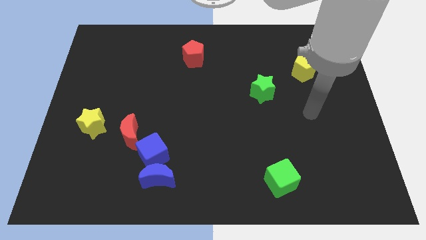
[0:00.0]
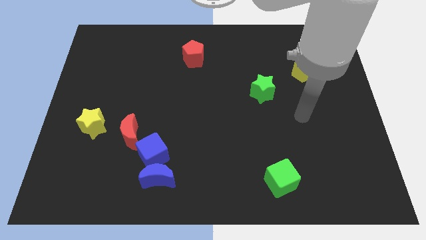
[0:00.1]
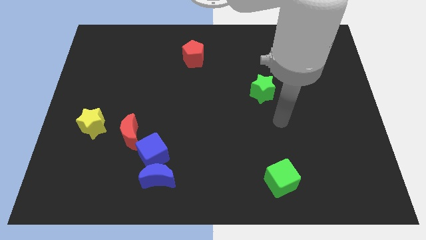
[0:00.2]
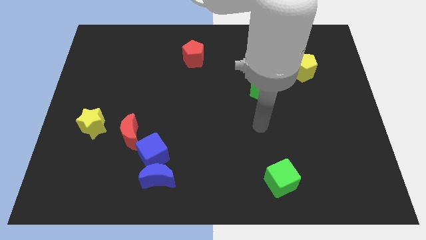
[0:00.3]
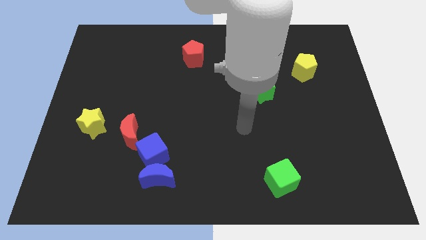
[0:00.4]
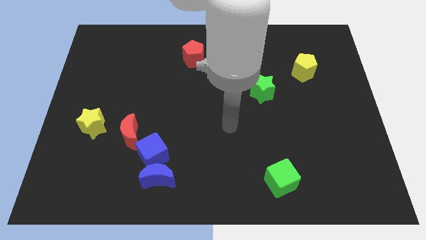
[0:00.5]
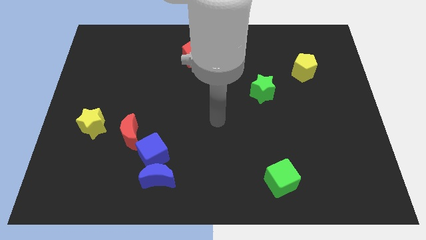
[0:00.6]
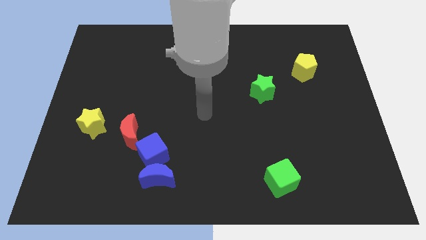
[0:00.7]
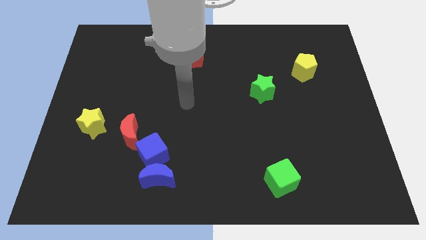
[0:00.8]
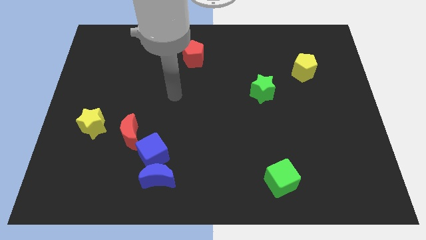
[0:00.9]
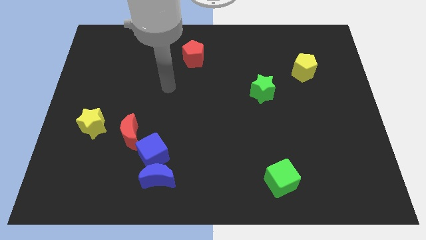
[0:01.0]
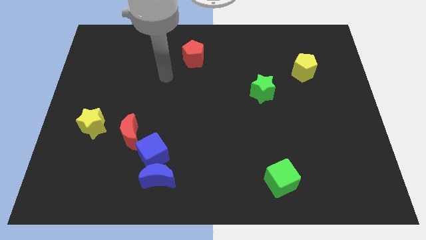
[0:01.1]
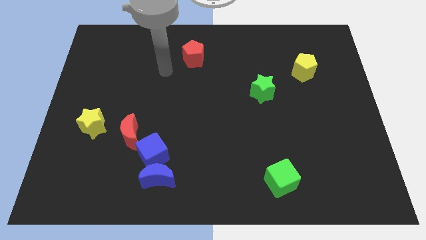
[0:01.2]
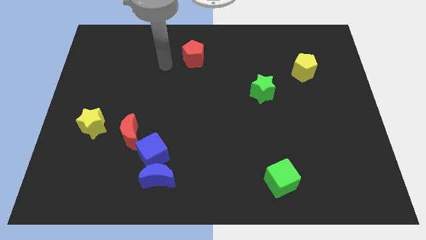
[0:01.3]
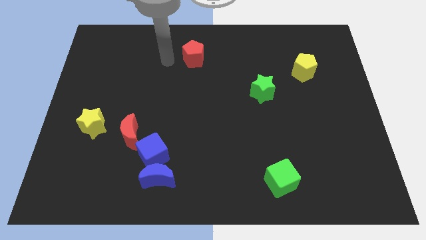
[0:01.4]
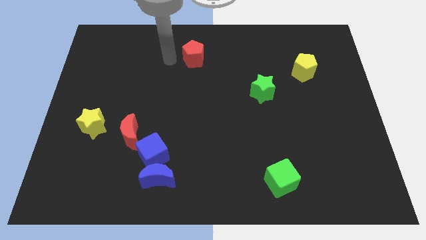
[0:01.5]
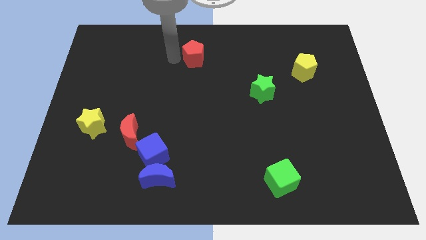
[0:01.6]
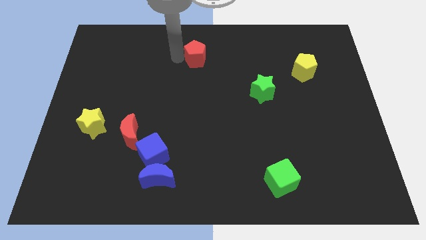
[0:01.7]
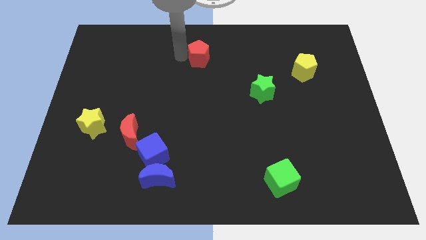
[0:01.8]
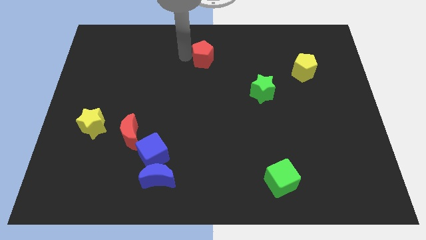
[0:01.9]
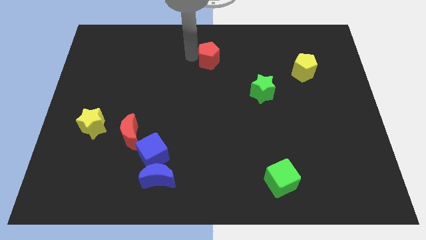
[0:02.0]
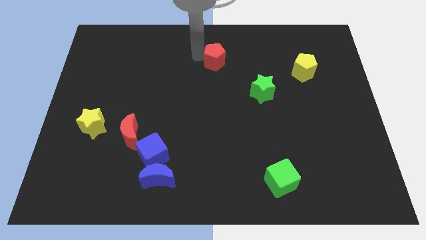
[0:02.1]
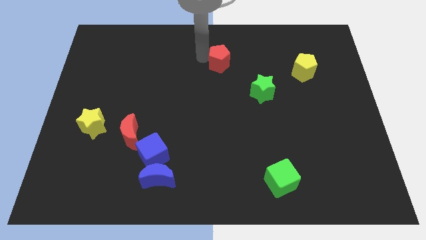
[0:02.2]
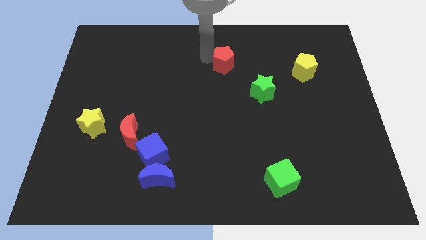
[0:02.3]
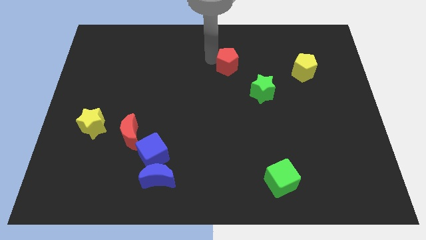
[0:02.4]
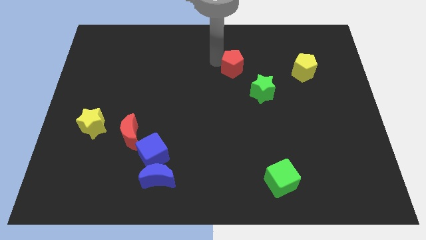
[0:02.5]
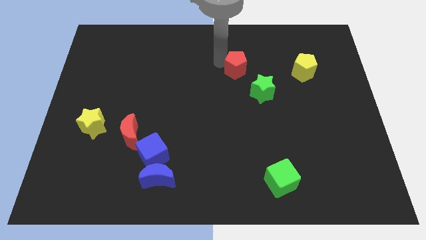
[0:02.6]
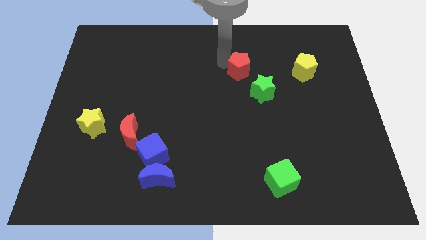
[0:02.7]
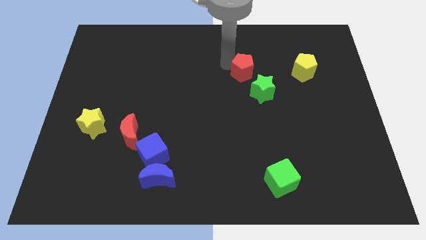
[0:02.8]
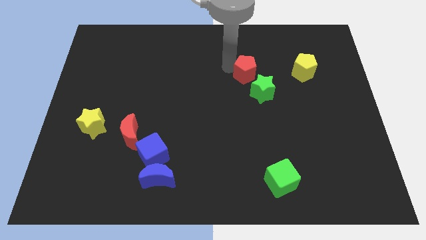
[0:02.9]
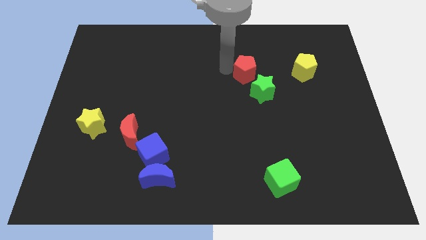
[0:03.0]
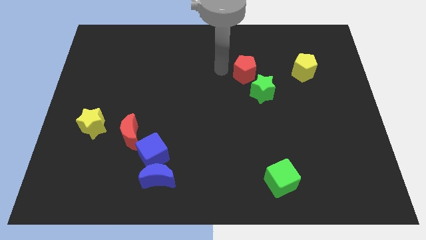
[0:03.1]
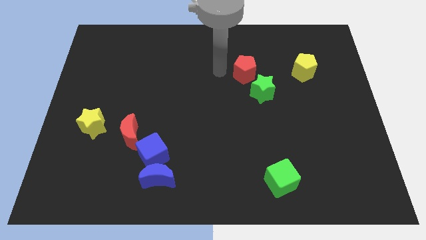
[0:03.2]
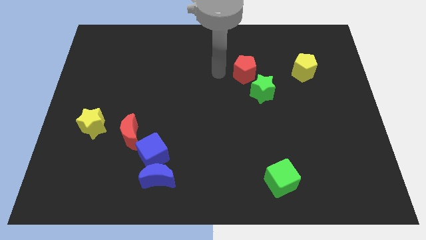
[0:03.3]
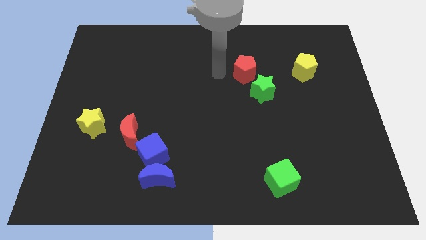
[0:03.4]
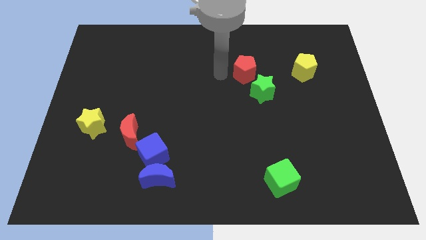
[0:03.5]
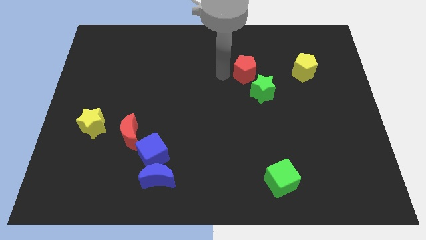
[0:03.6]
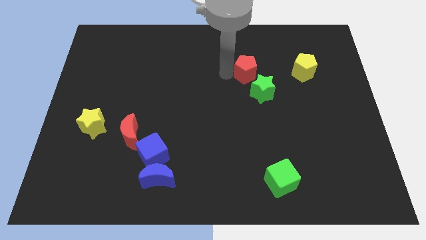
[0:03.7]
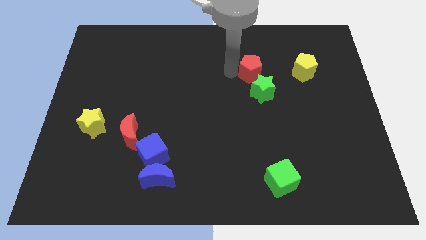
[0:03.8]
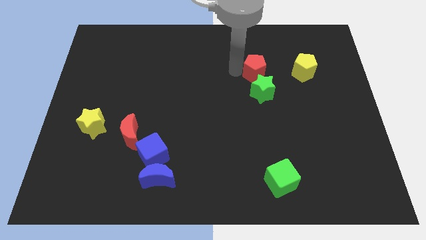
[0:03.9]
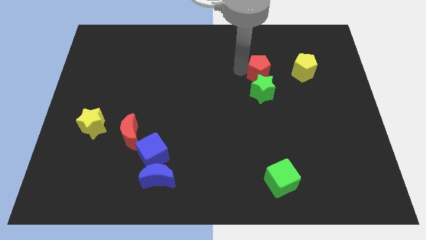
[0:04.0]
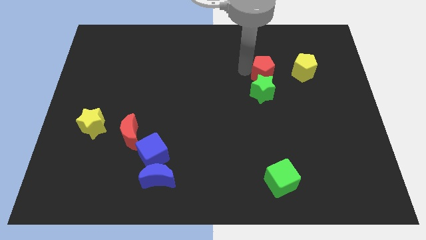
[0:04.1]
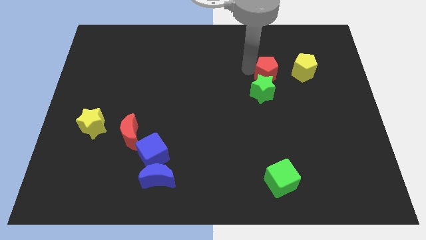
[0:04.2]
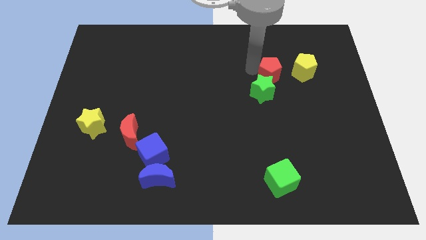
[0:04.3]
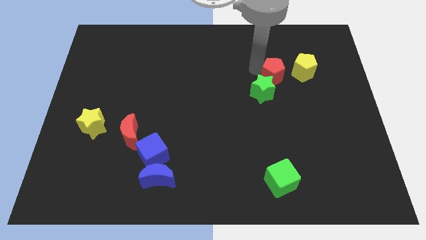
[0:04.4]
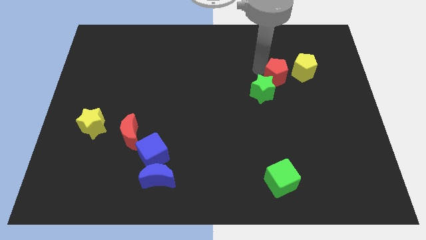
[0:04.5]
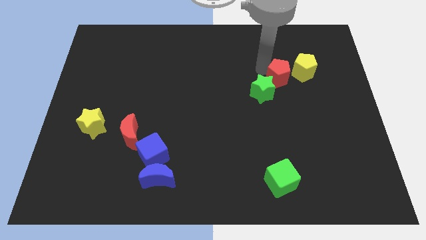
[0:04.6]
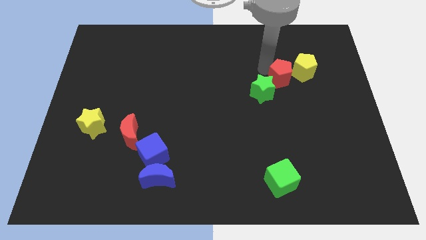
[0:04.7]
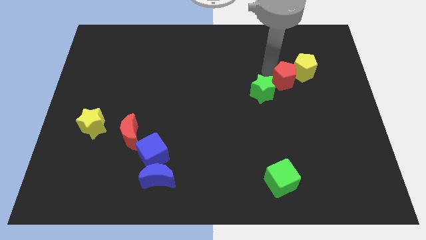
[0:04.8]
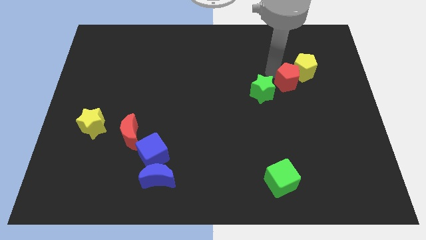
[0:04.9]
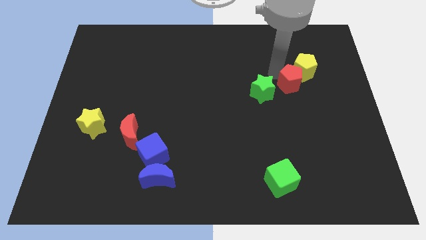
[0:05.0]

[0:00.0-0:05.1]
put the red pentagon close to the yellow pentagon

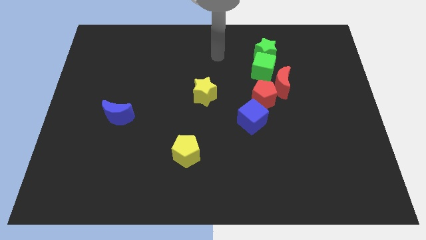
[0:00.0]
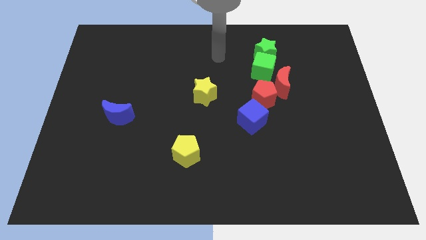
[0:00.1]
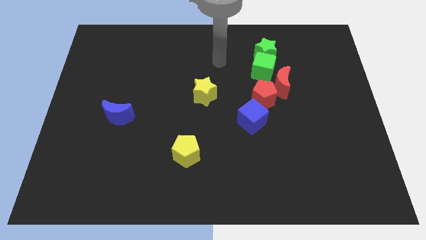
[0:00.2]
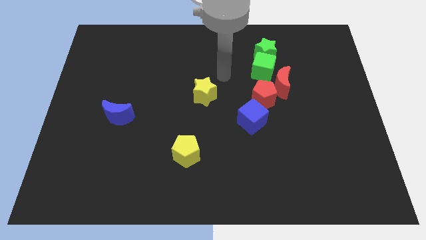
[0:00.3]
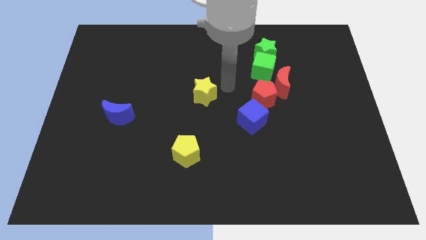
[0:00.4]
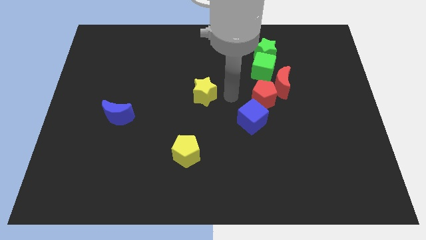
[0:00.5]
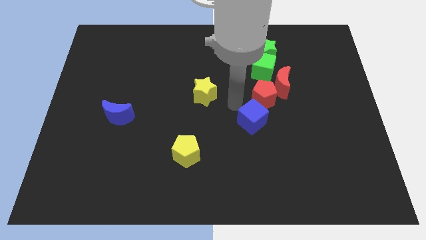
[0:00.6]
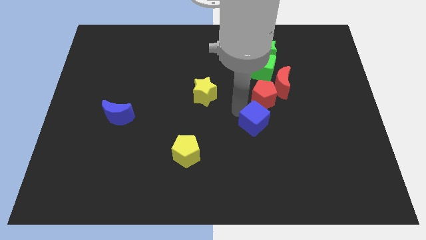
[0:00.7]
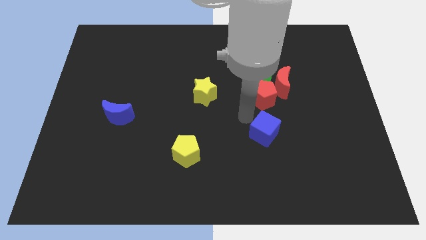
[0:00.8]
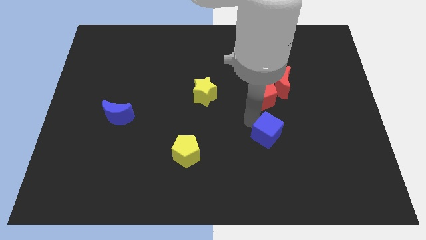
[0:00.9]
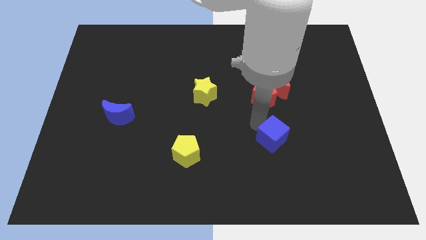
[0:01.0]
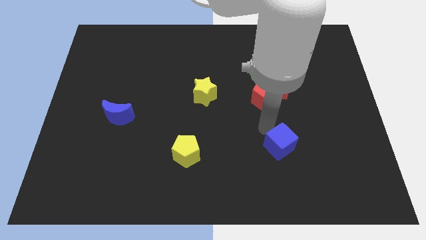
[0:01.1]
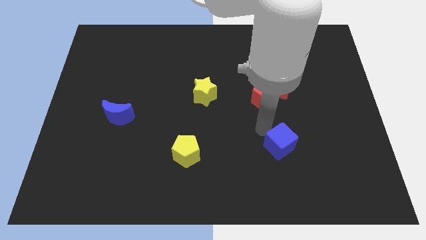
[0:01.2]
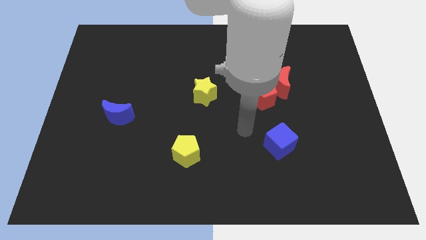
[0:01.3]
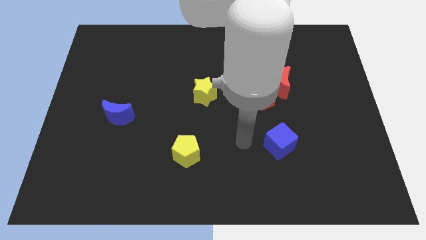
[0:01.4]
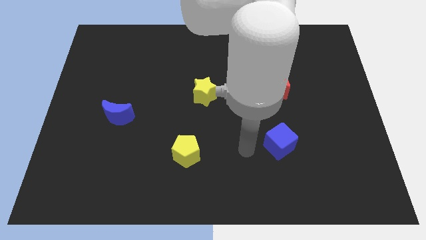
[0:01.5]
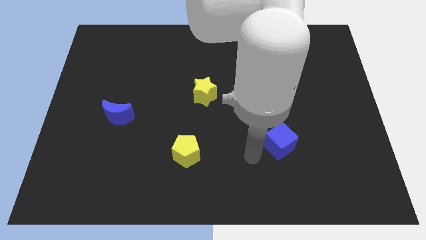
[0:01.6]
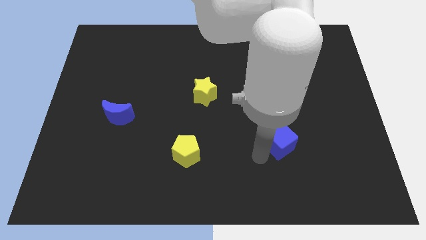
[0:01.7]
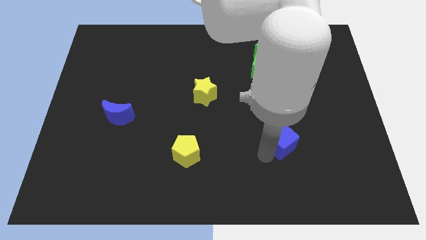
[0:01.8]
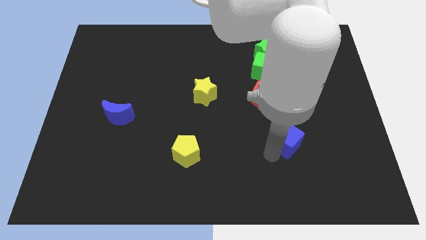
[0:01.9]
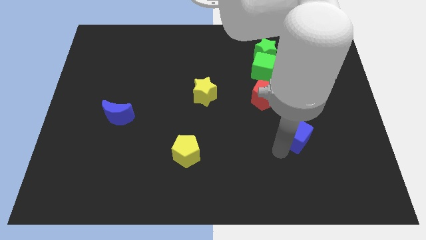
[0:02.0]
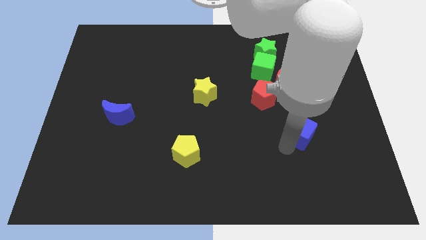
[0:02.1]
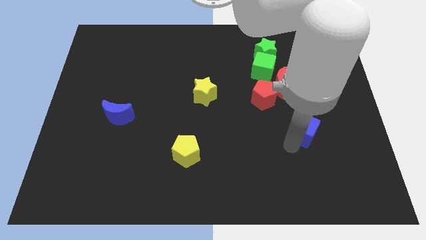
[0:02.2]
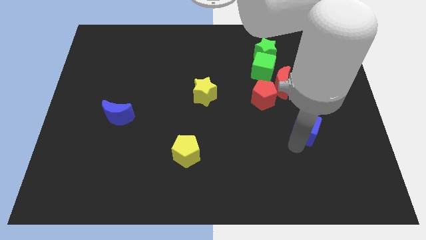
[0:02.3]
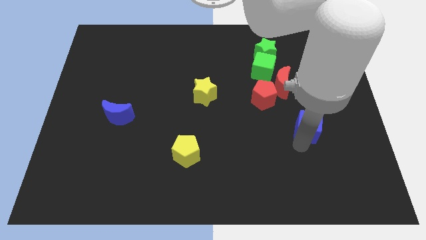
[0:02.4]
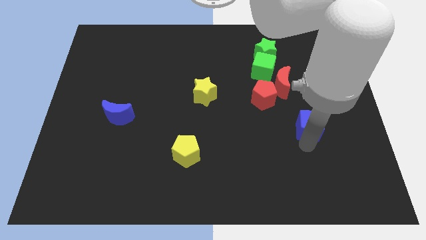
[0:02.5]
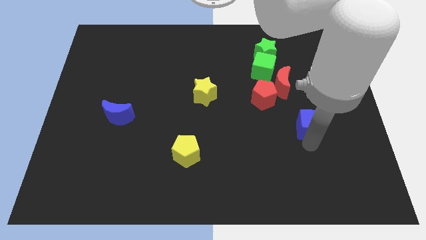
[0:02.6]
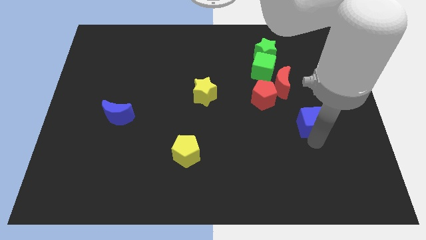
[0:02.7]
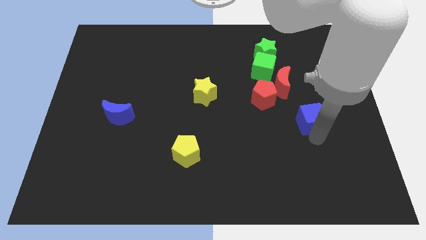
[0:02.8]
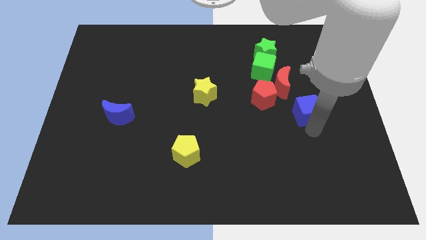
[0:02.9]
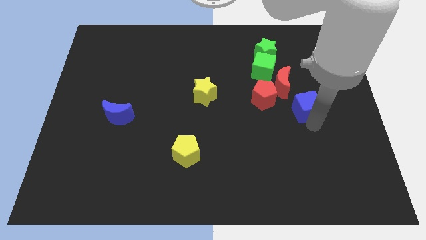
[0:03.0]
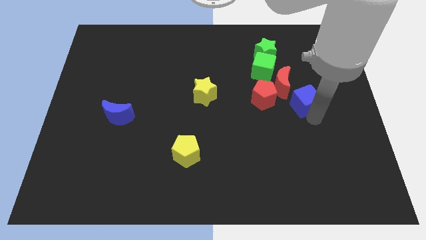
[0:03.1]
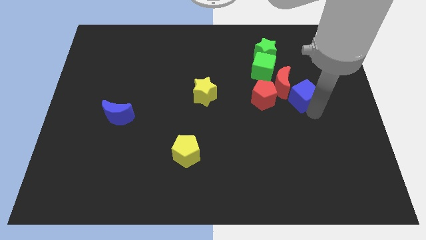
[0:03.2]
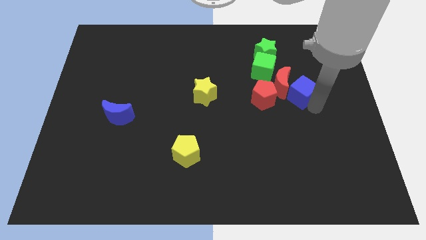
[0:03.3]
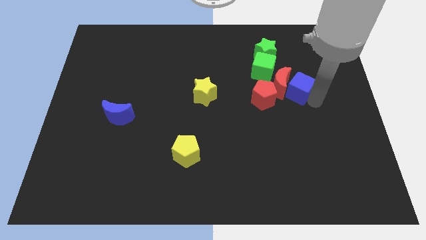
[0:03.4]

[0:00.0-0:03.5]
push the blue cube towards the red moon
